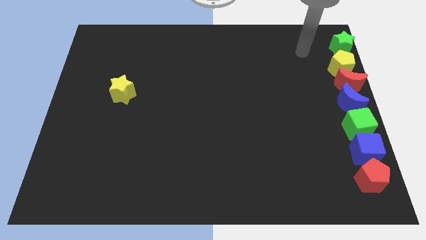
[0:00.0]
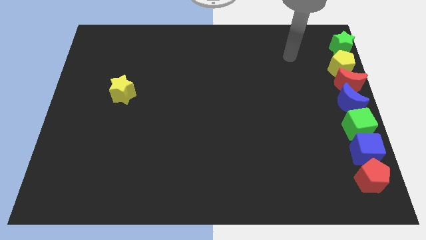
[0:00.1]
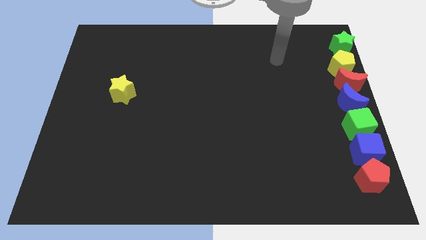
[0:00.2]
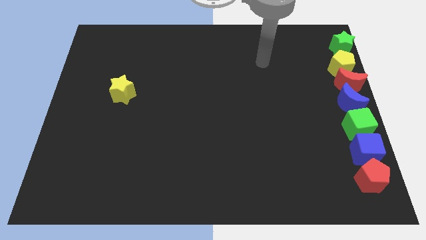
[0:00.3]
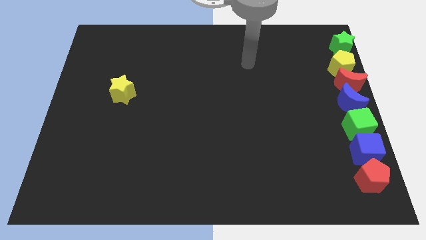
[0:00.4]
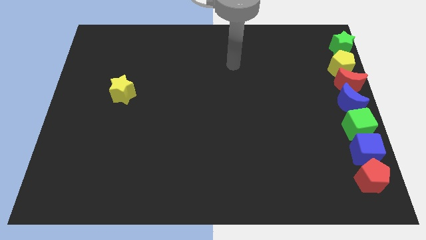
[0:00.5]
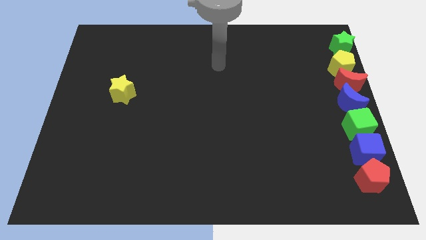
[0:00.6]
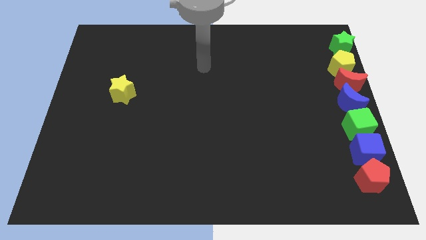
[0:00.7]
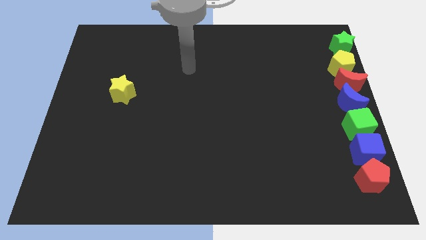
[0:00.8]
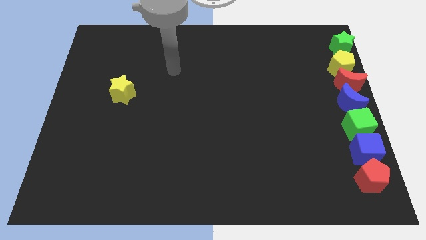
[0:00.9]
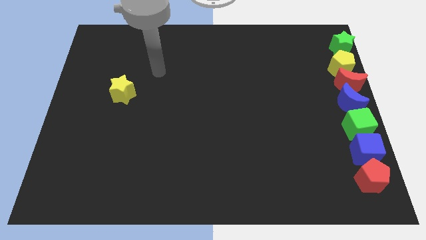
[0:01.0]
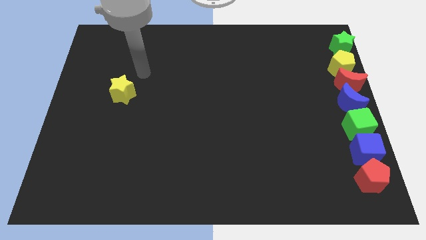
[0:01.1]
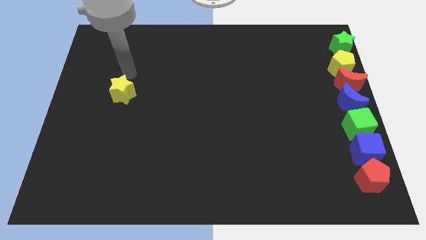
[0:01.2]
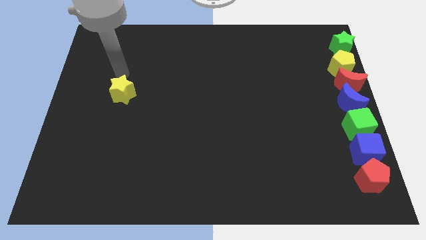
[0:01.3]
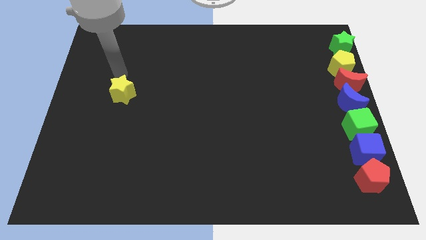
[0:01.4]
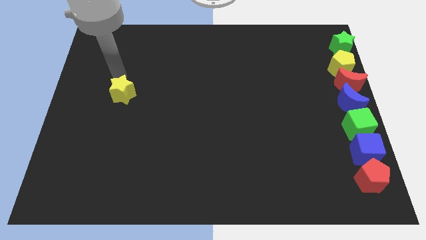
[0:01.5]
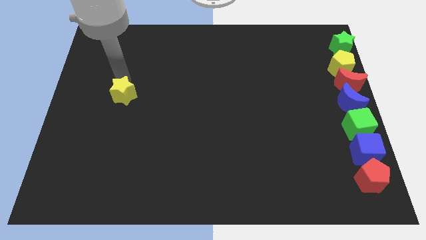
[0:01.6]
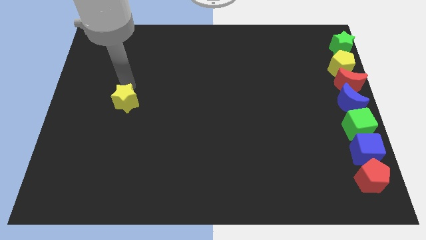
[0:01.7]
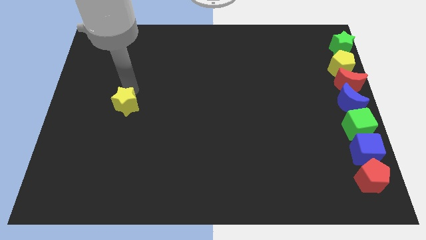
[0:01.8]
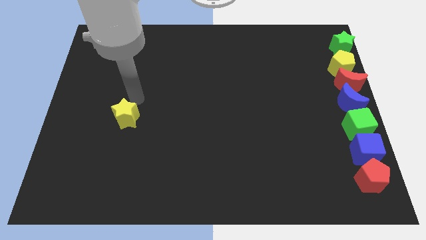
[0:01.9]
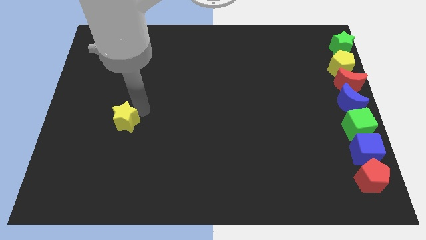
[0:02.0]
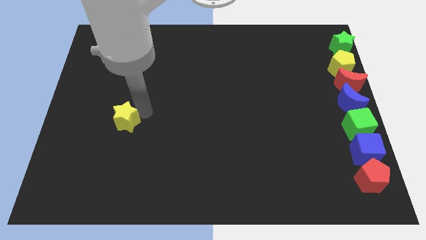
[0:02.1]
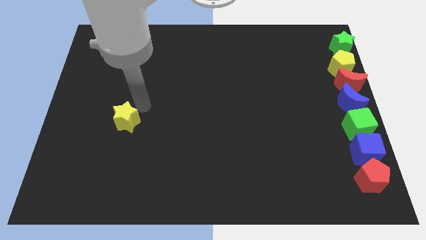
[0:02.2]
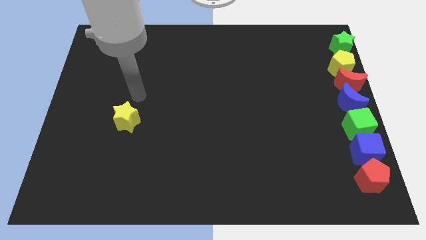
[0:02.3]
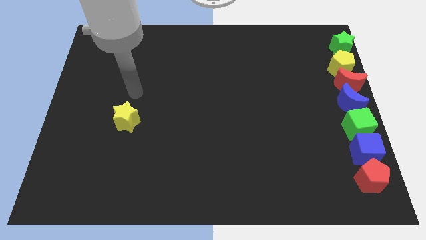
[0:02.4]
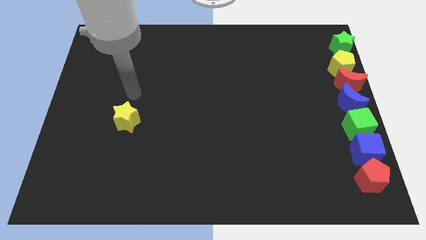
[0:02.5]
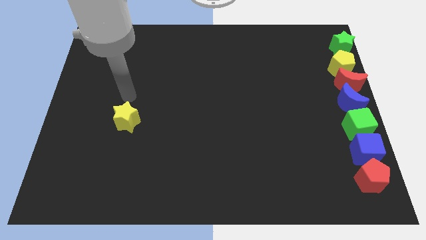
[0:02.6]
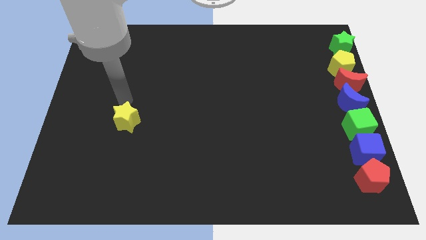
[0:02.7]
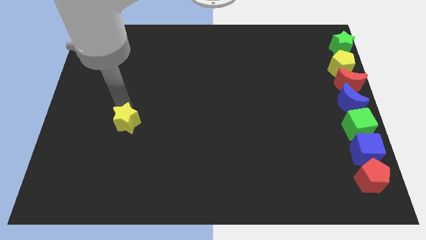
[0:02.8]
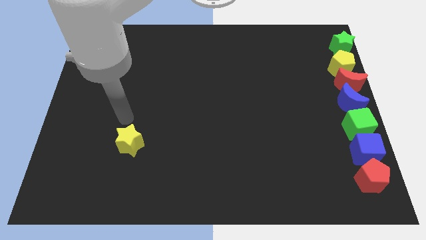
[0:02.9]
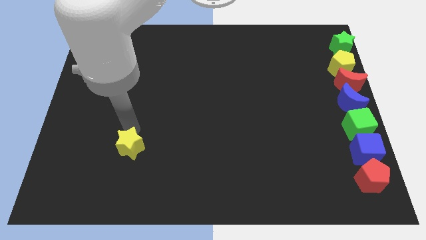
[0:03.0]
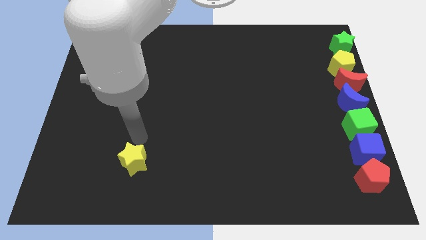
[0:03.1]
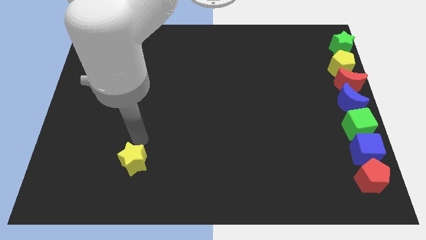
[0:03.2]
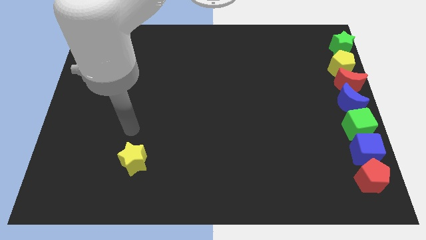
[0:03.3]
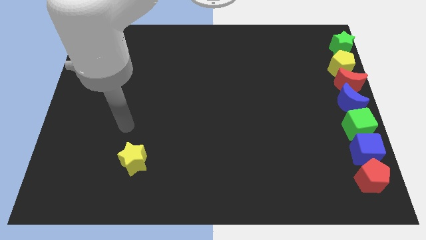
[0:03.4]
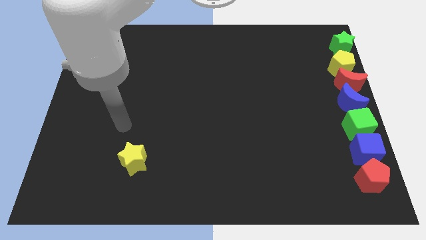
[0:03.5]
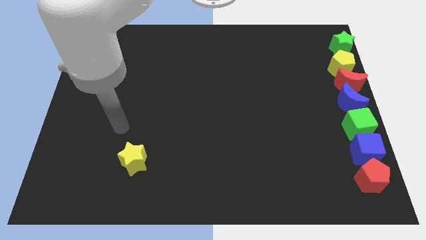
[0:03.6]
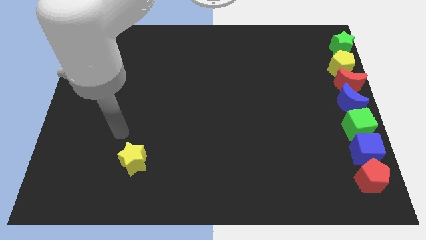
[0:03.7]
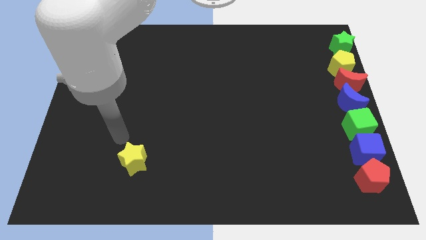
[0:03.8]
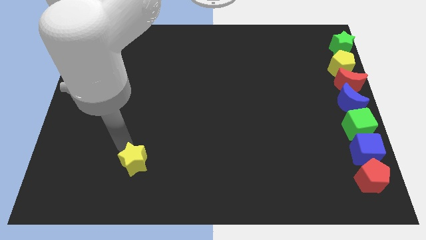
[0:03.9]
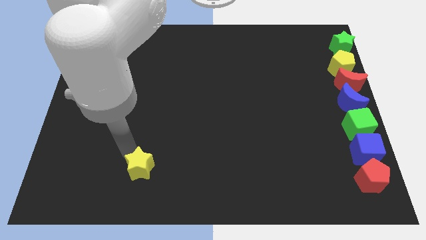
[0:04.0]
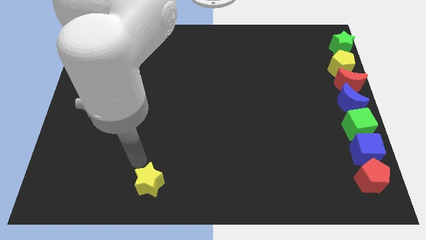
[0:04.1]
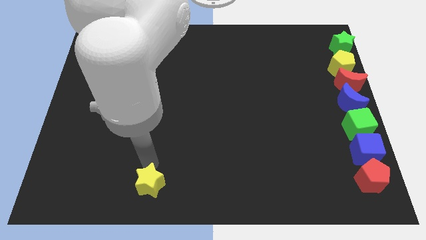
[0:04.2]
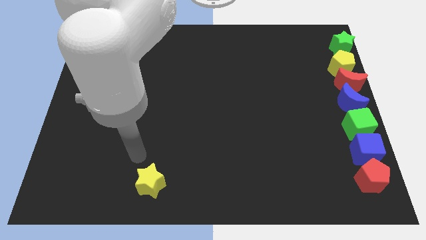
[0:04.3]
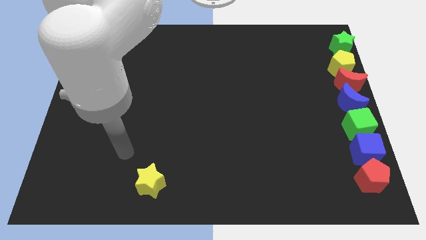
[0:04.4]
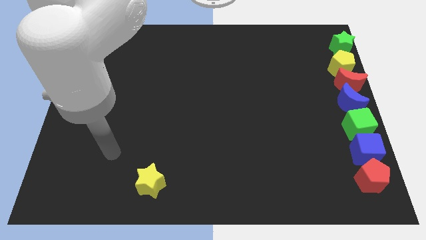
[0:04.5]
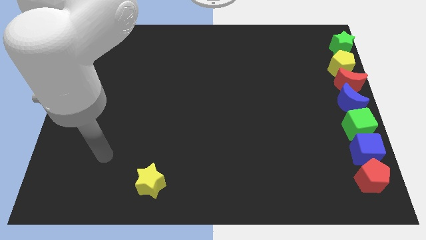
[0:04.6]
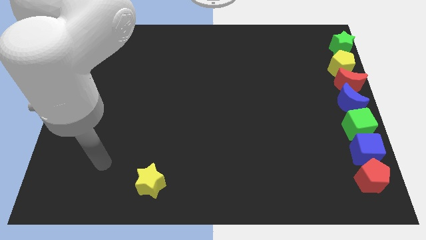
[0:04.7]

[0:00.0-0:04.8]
go and push the yellow star to the bottom

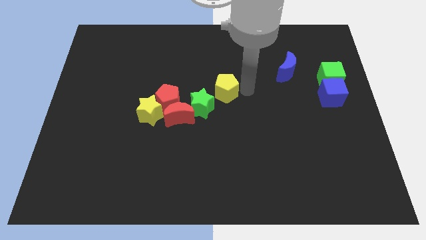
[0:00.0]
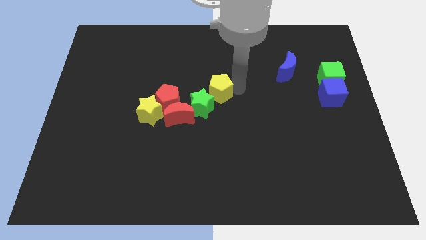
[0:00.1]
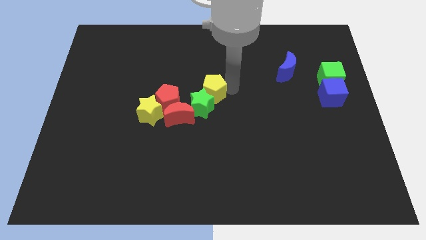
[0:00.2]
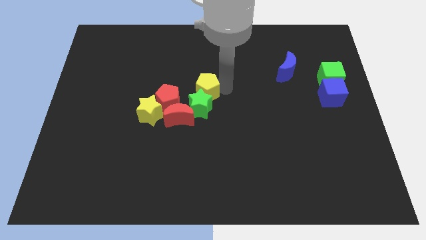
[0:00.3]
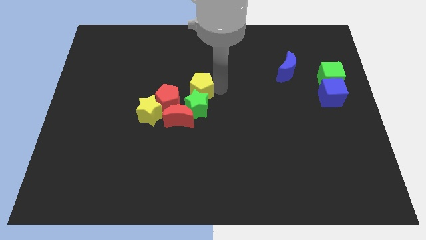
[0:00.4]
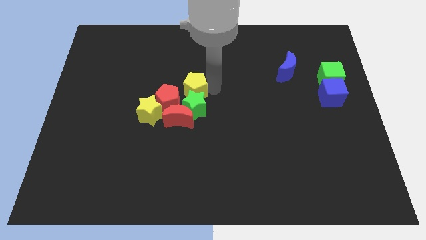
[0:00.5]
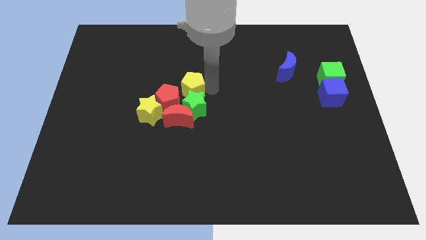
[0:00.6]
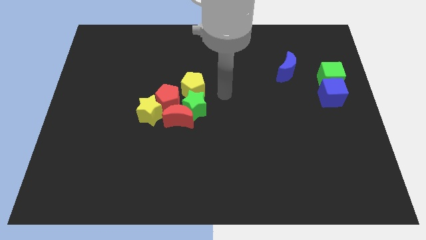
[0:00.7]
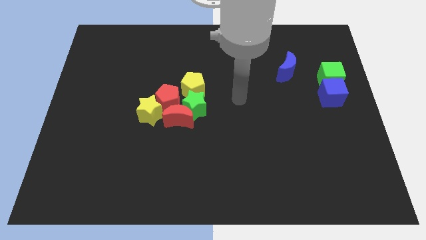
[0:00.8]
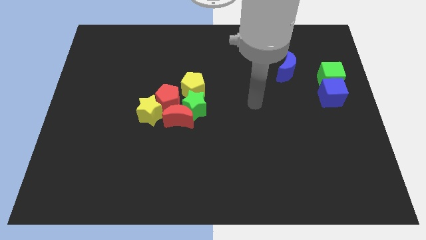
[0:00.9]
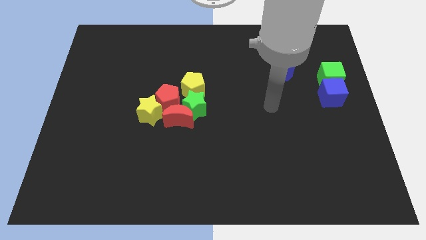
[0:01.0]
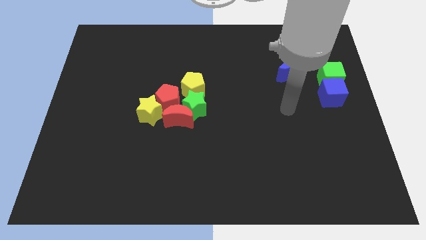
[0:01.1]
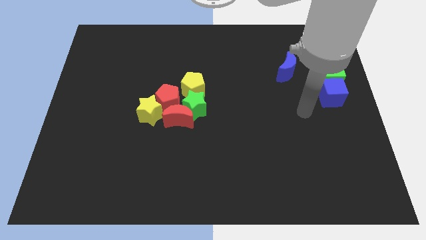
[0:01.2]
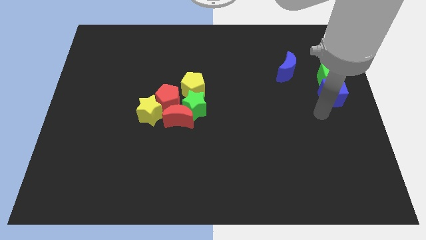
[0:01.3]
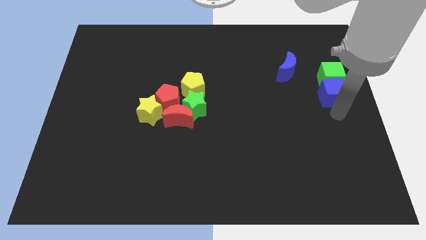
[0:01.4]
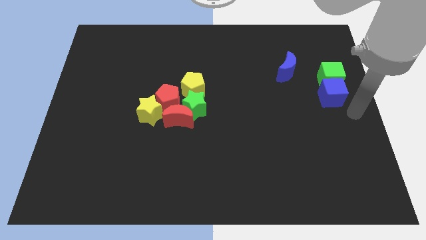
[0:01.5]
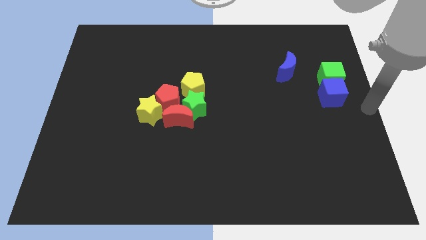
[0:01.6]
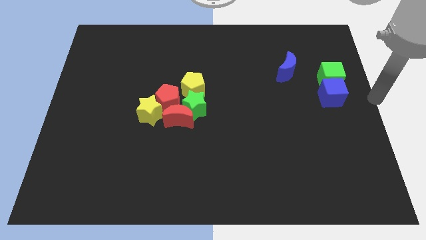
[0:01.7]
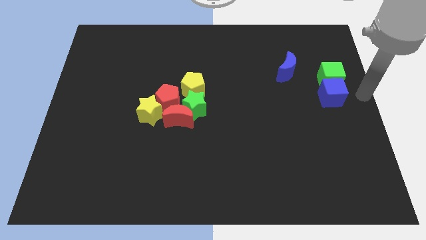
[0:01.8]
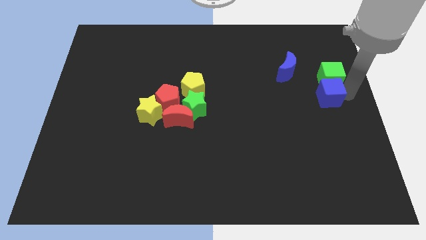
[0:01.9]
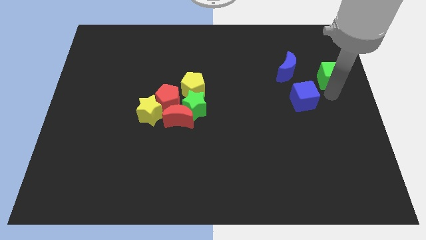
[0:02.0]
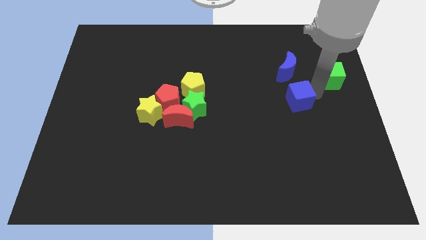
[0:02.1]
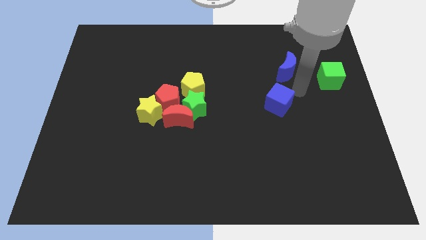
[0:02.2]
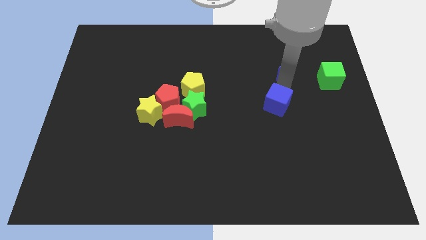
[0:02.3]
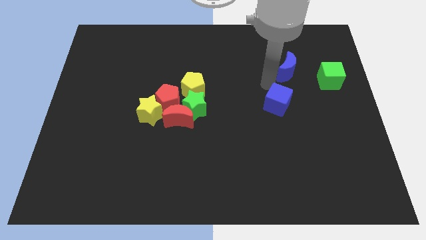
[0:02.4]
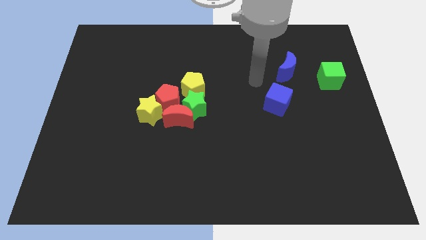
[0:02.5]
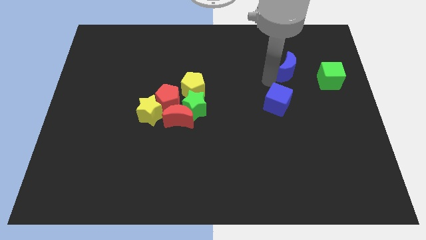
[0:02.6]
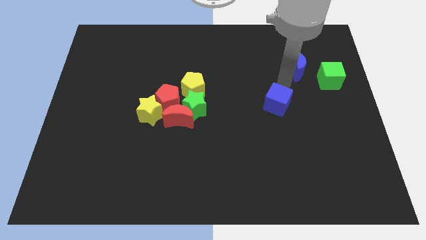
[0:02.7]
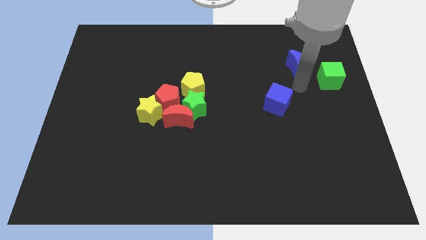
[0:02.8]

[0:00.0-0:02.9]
move your arm away from yellow pentagon

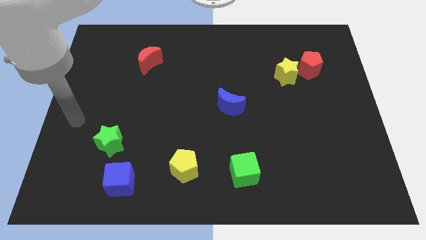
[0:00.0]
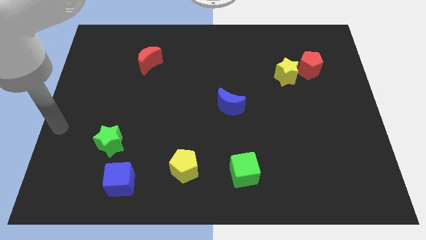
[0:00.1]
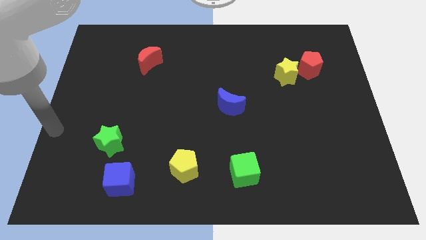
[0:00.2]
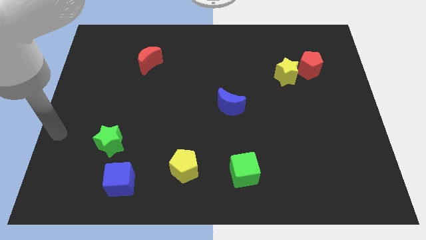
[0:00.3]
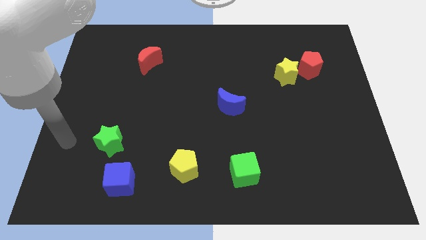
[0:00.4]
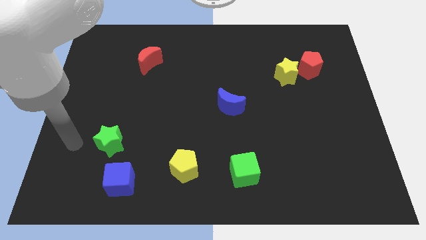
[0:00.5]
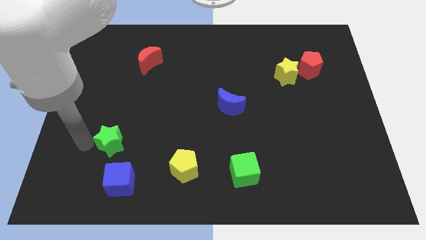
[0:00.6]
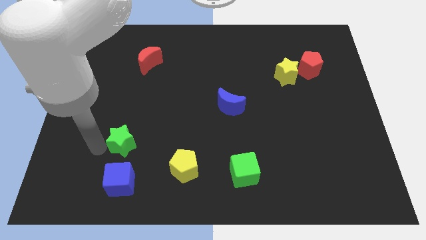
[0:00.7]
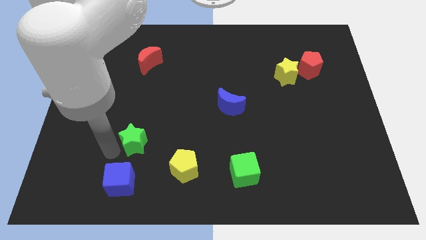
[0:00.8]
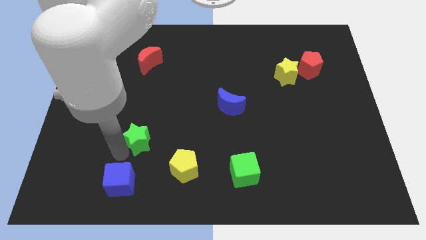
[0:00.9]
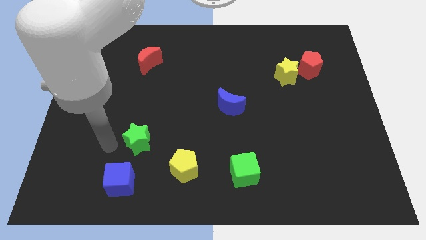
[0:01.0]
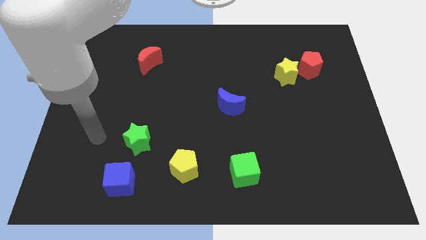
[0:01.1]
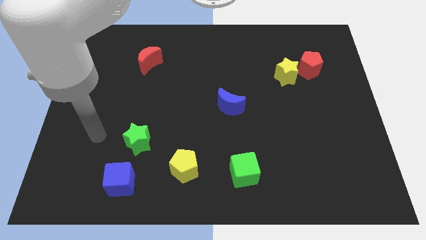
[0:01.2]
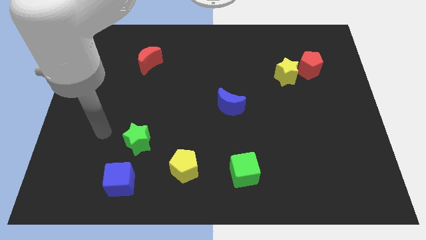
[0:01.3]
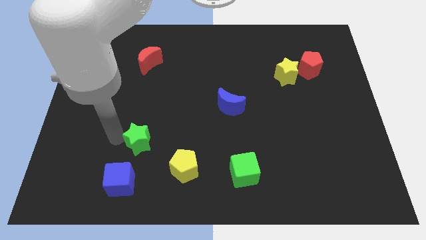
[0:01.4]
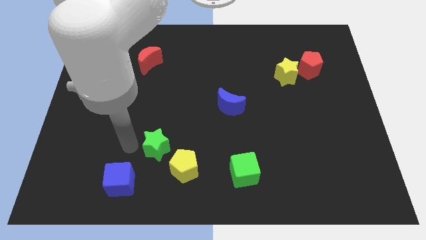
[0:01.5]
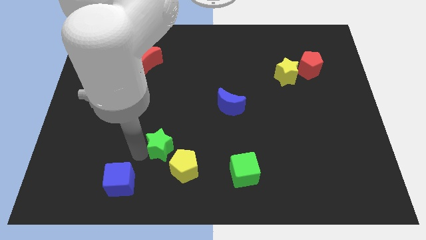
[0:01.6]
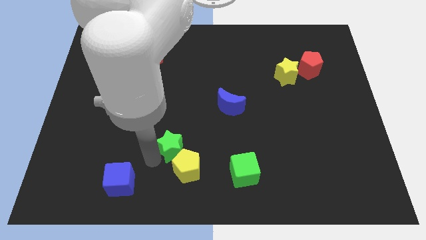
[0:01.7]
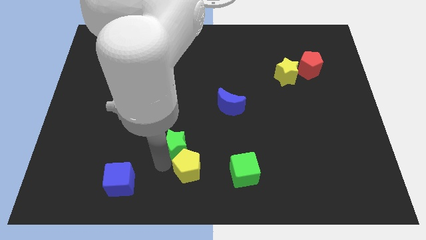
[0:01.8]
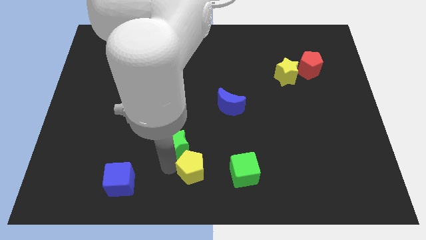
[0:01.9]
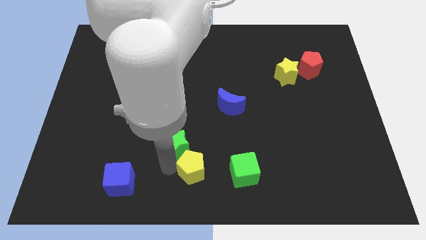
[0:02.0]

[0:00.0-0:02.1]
push green star into yellow pentagon
